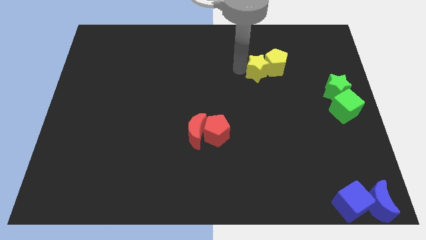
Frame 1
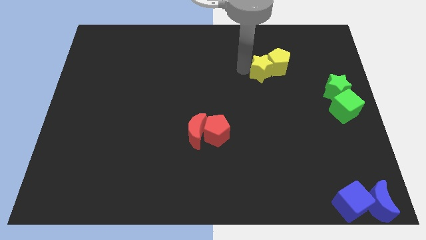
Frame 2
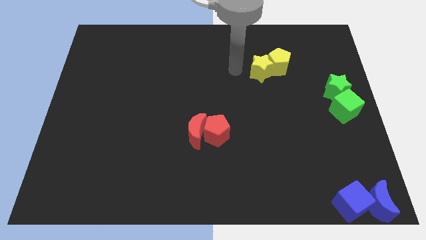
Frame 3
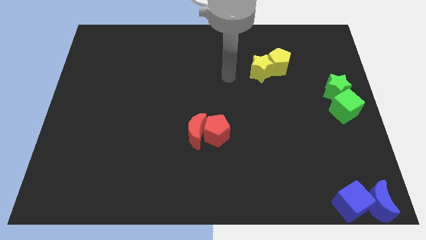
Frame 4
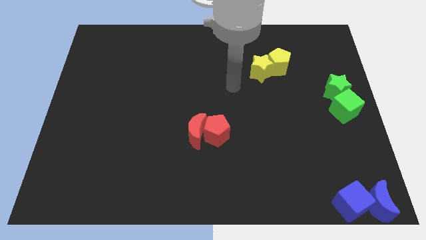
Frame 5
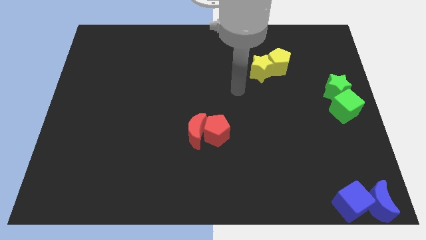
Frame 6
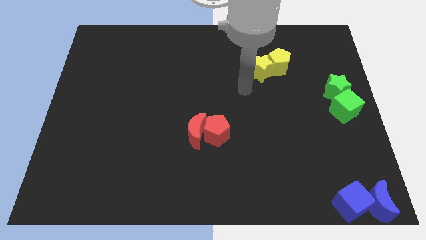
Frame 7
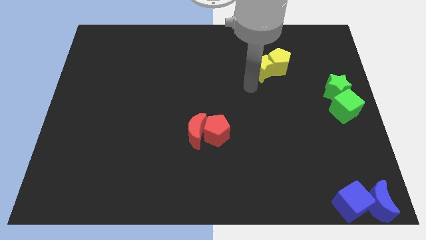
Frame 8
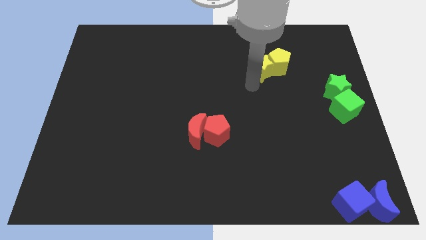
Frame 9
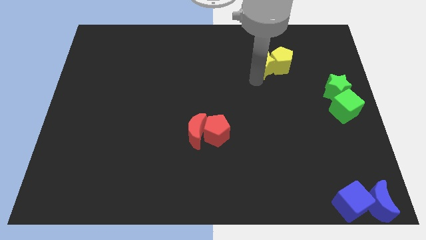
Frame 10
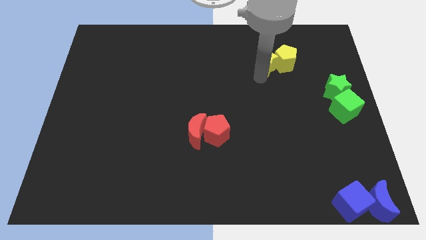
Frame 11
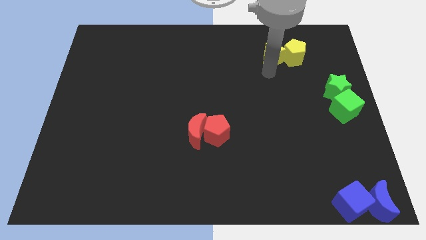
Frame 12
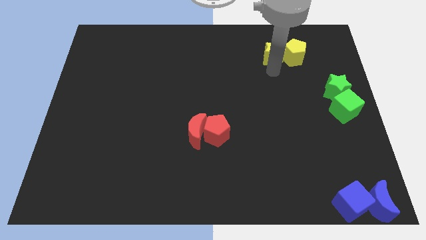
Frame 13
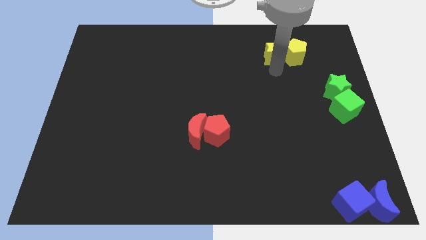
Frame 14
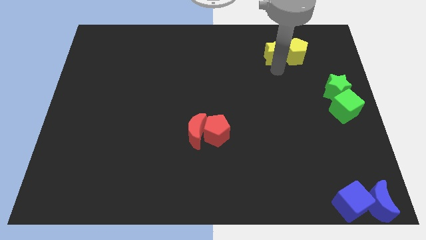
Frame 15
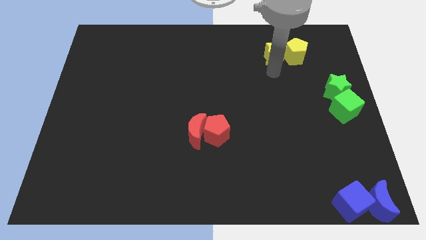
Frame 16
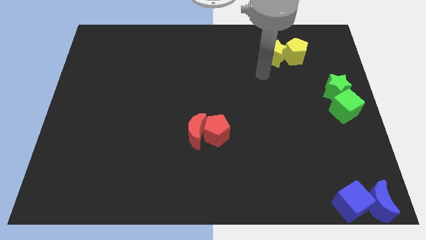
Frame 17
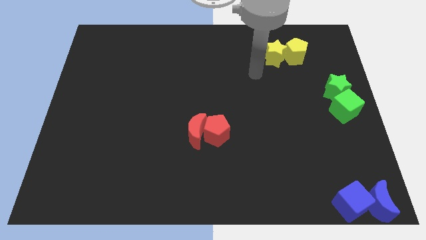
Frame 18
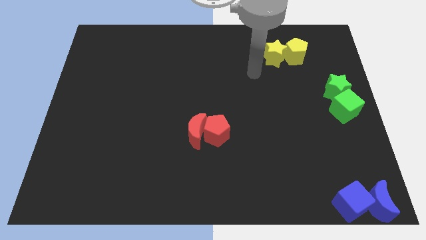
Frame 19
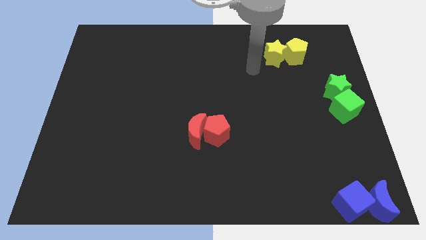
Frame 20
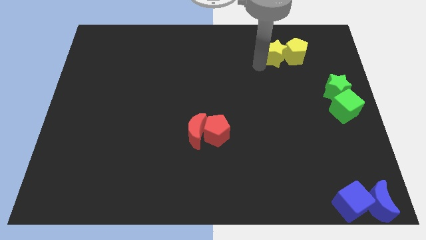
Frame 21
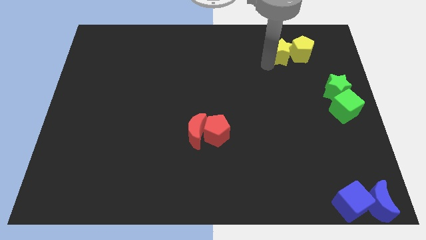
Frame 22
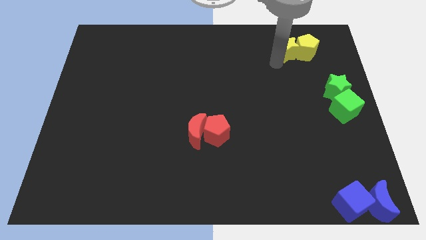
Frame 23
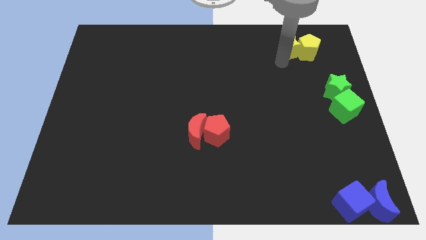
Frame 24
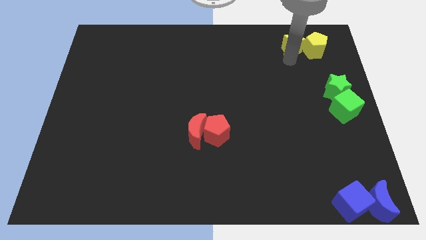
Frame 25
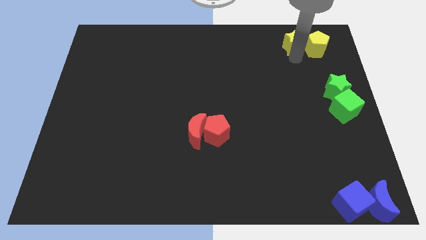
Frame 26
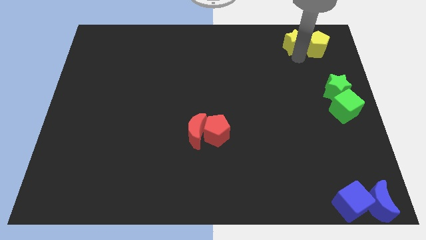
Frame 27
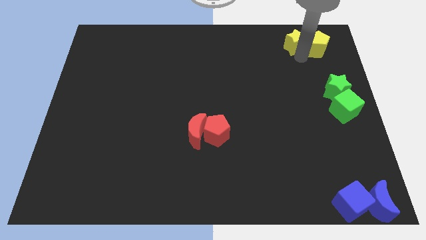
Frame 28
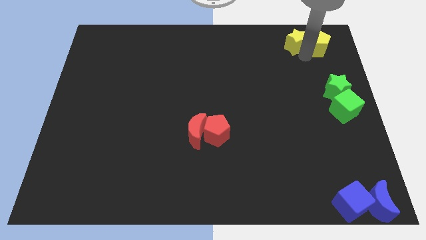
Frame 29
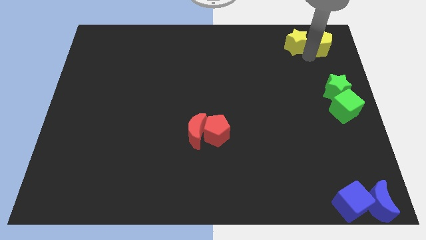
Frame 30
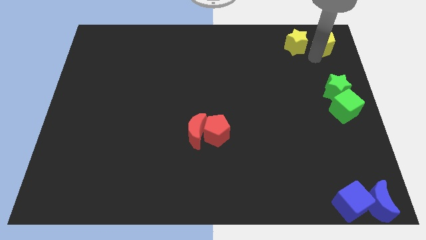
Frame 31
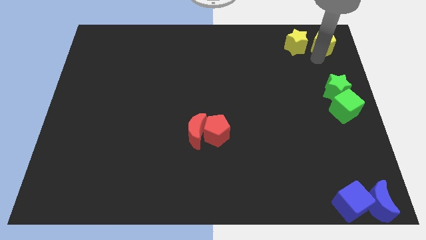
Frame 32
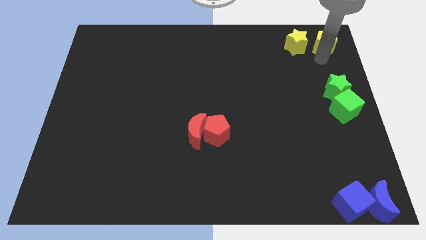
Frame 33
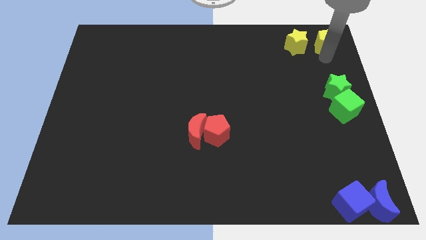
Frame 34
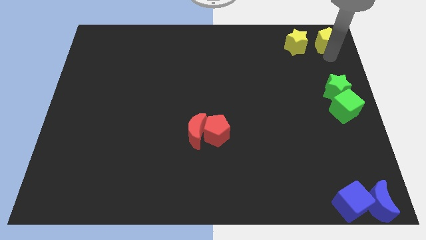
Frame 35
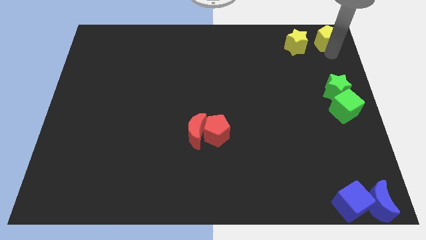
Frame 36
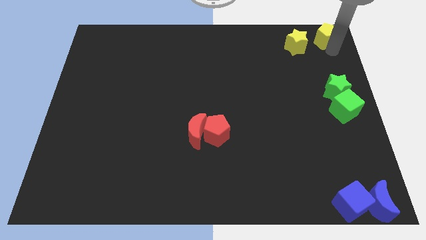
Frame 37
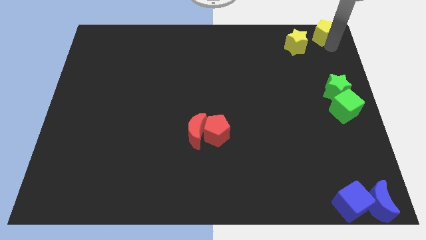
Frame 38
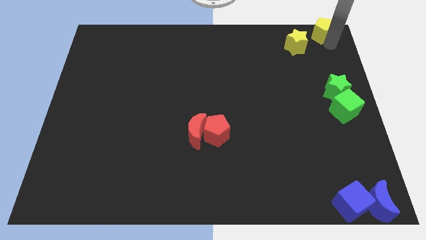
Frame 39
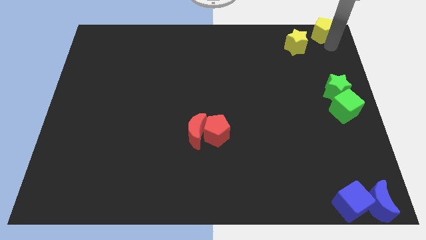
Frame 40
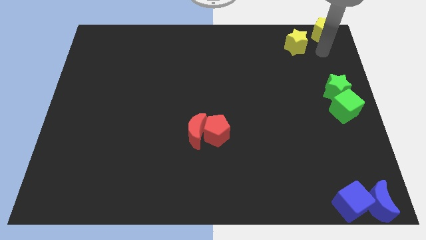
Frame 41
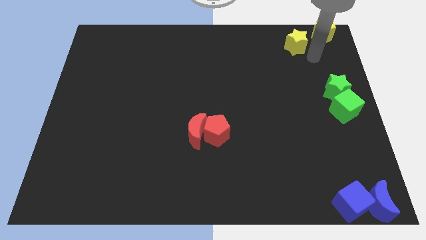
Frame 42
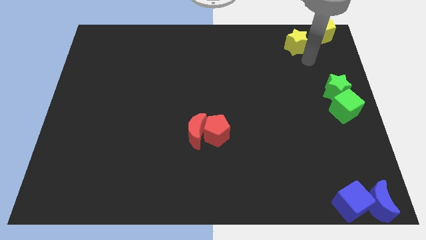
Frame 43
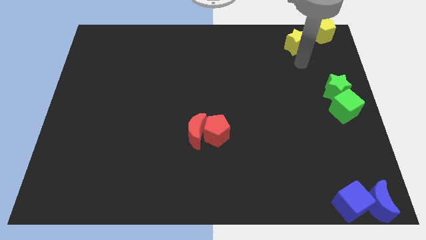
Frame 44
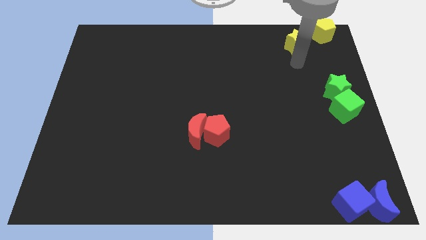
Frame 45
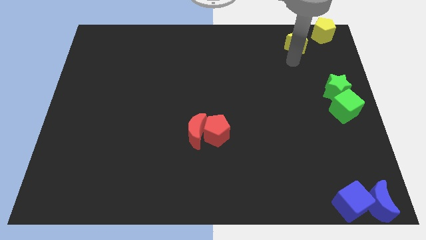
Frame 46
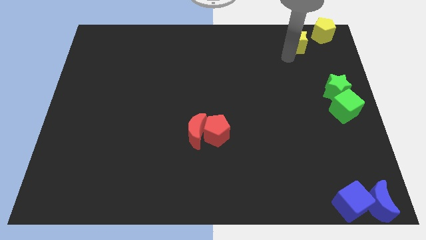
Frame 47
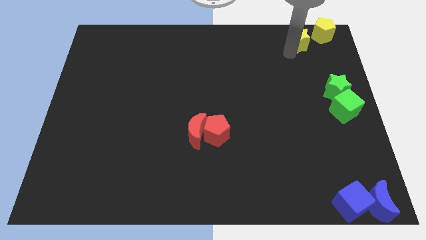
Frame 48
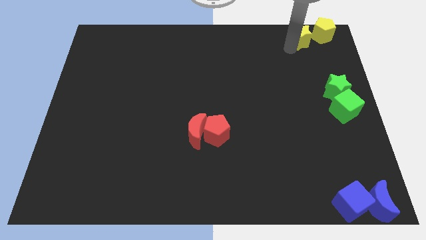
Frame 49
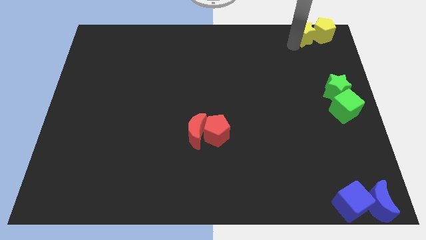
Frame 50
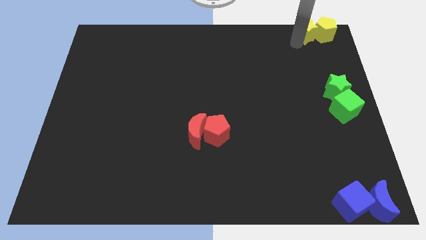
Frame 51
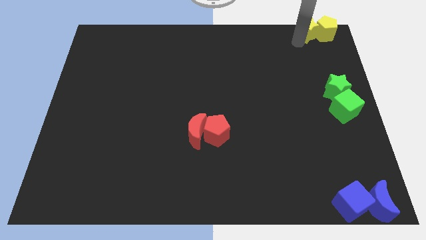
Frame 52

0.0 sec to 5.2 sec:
place yellow star beside yellow pentagon

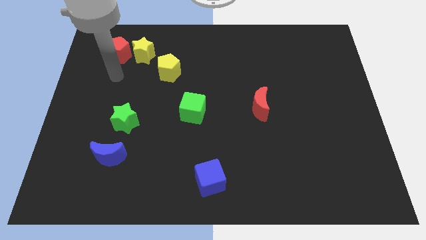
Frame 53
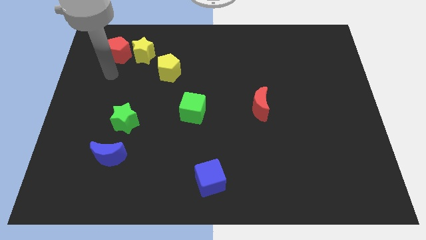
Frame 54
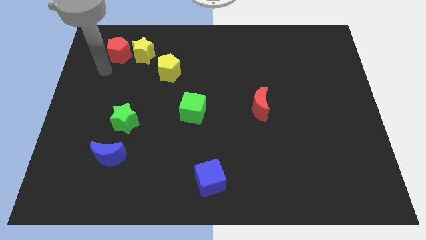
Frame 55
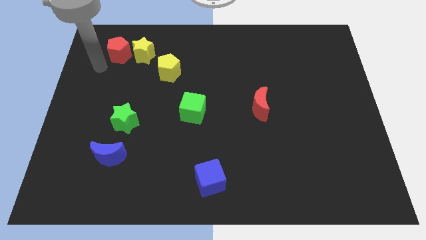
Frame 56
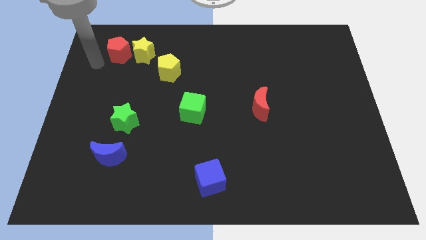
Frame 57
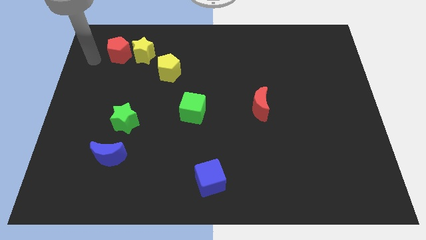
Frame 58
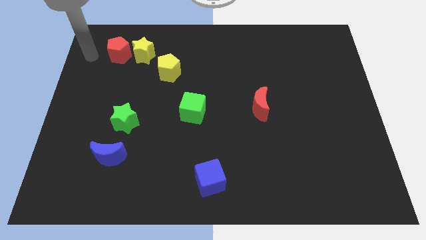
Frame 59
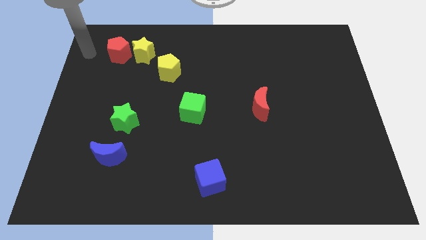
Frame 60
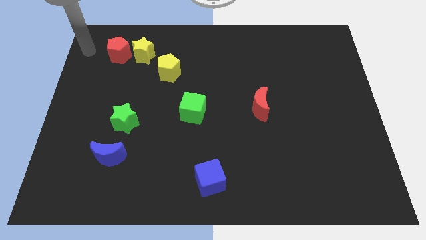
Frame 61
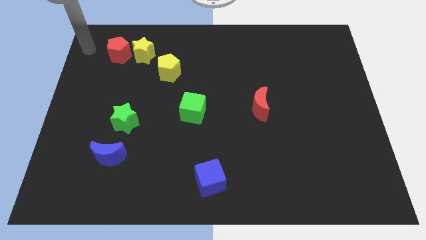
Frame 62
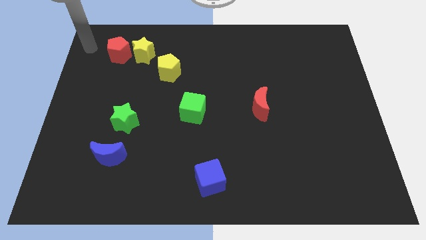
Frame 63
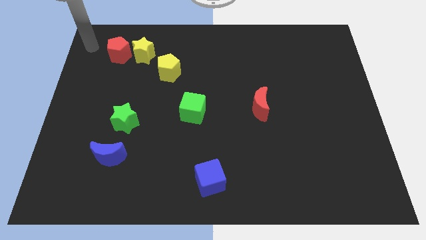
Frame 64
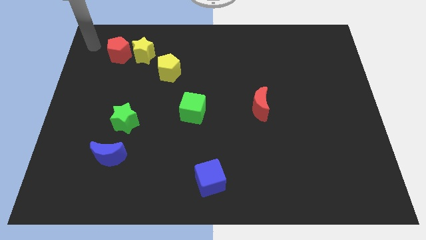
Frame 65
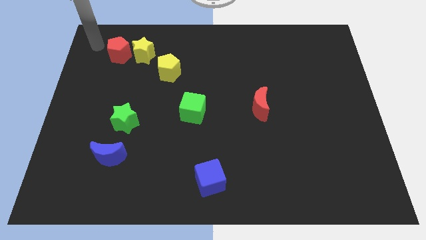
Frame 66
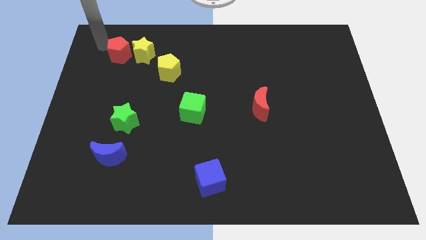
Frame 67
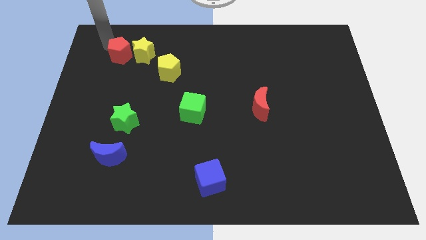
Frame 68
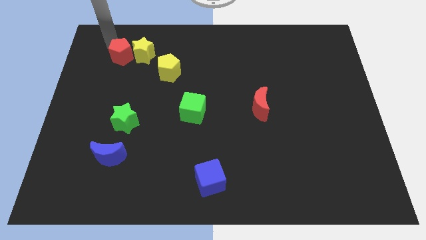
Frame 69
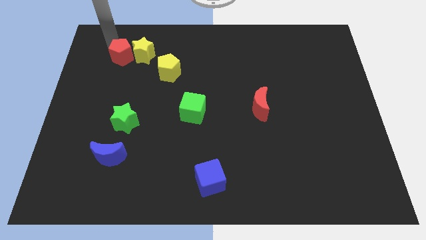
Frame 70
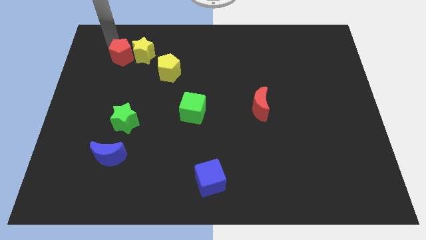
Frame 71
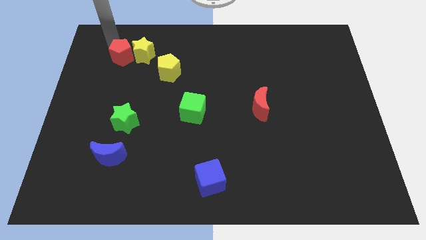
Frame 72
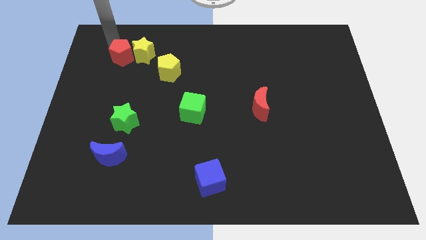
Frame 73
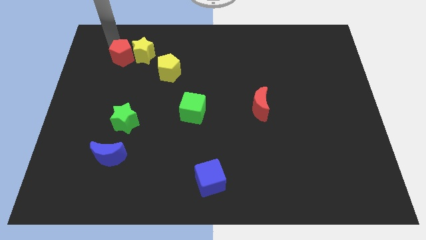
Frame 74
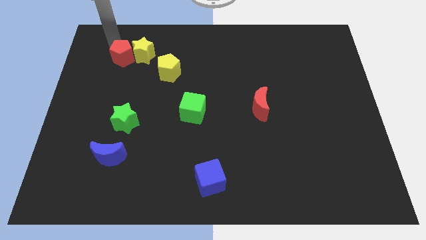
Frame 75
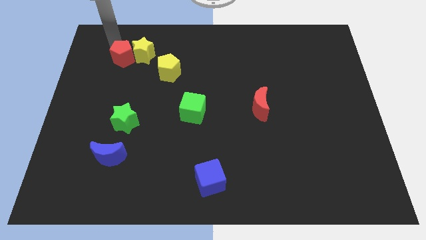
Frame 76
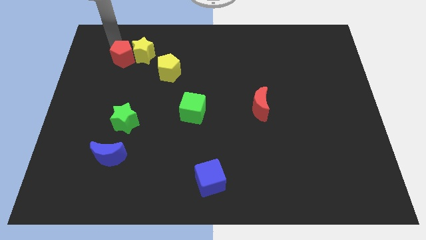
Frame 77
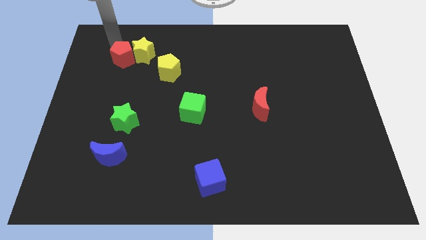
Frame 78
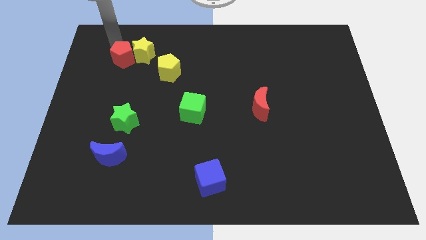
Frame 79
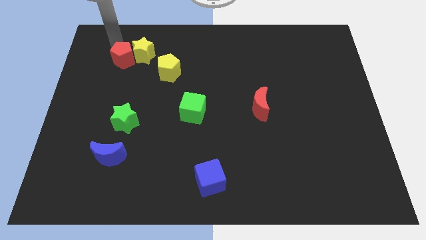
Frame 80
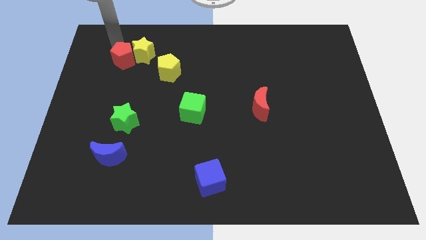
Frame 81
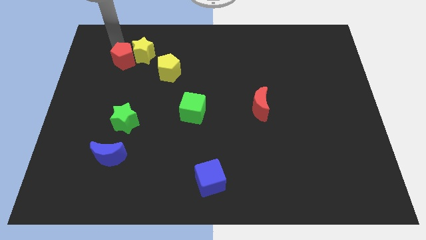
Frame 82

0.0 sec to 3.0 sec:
slightly push the red pentagon towards green star

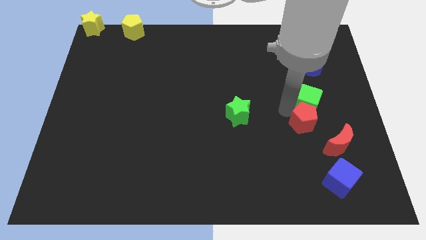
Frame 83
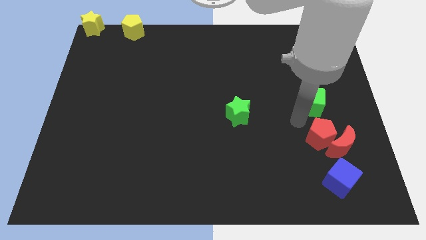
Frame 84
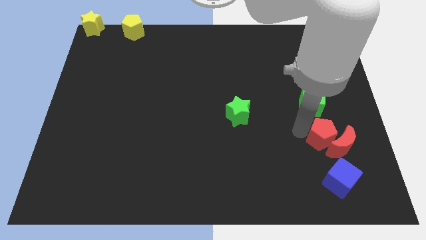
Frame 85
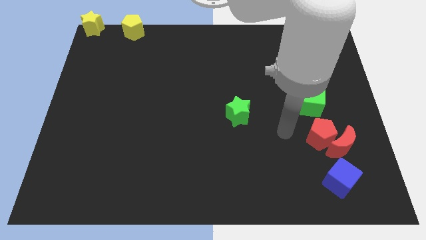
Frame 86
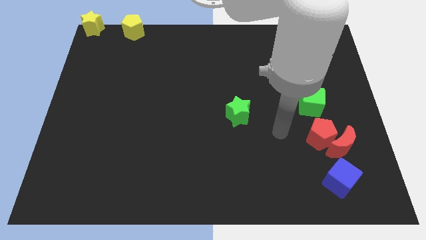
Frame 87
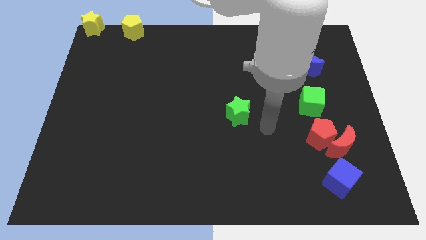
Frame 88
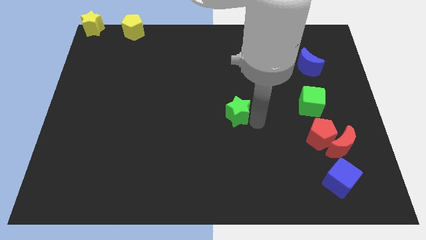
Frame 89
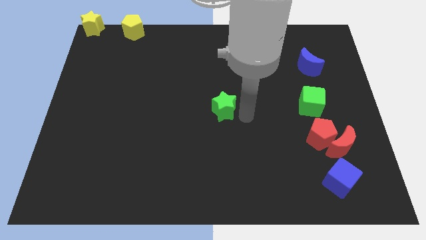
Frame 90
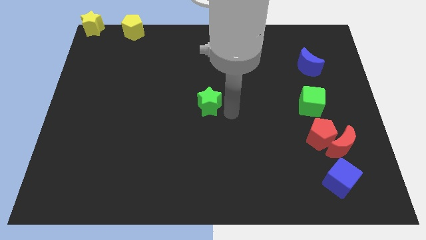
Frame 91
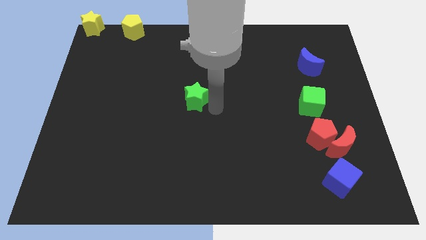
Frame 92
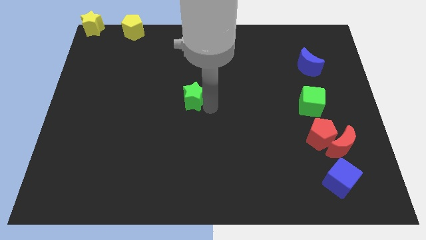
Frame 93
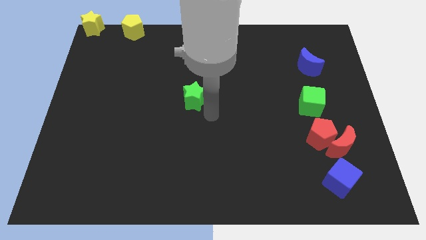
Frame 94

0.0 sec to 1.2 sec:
place the green star in the middle of the board
